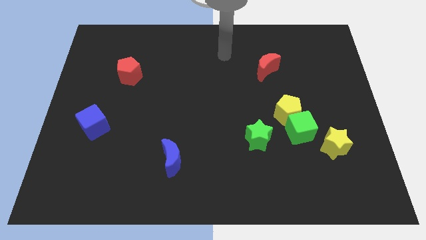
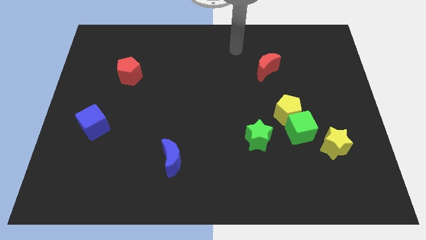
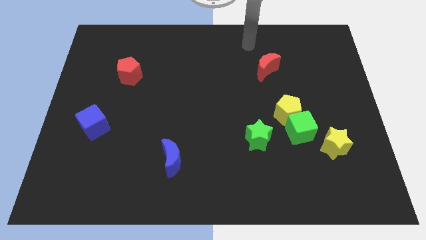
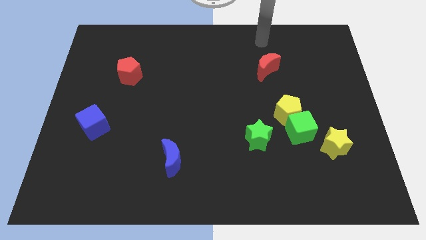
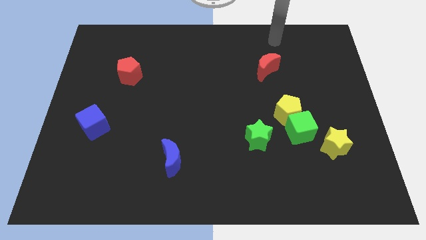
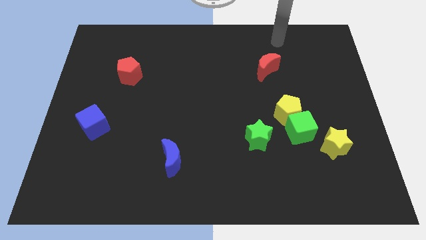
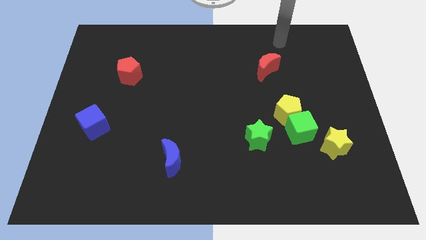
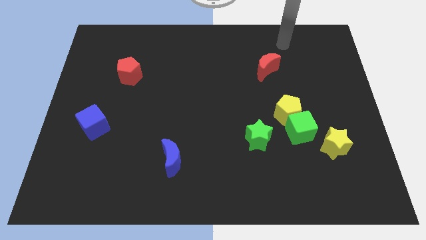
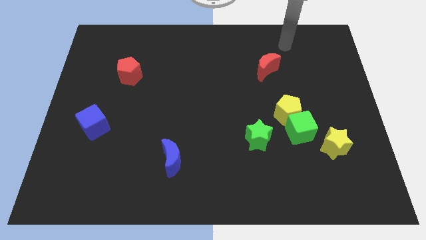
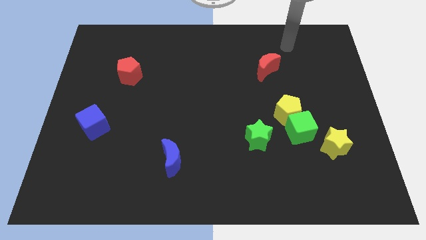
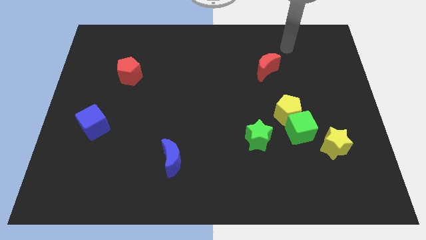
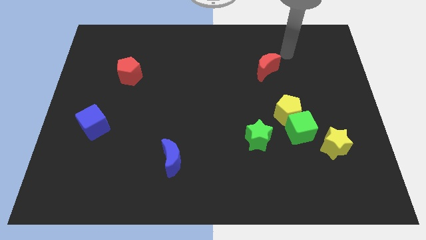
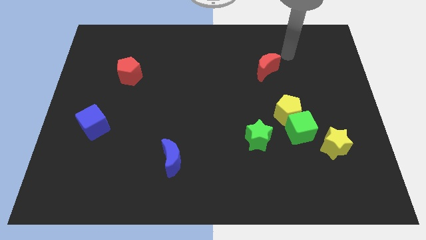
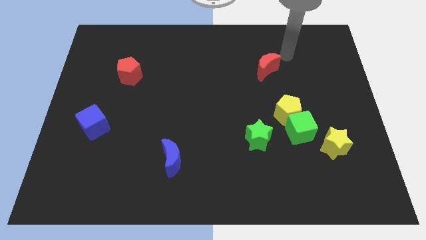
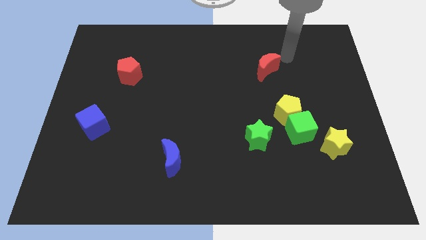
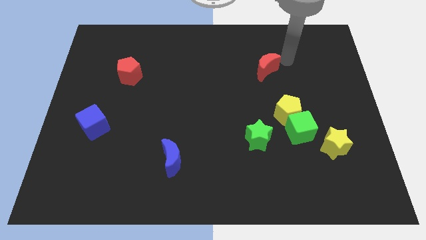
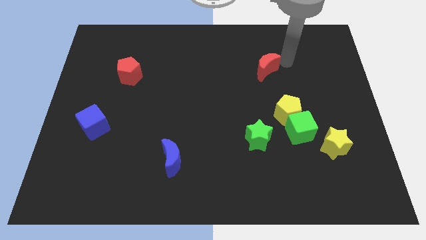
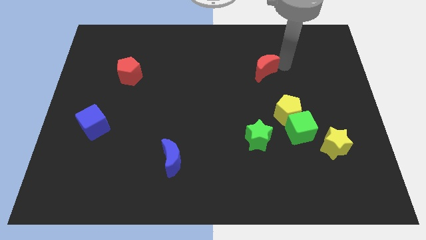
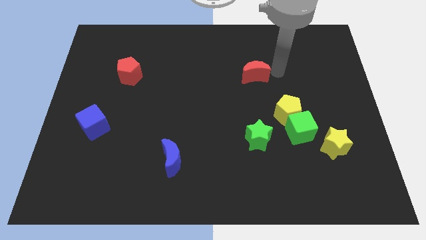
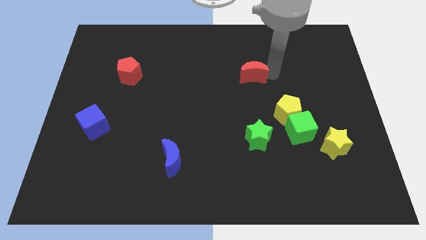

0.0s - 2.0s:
put the red moon vertically above the green star

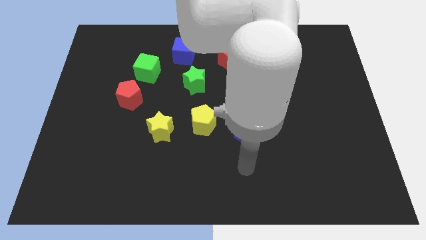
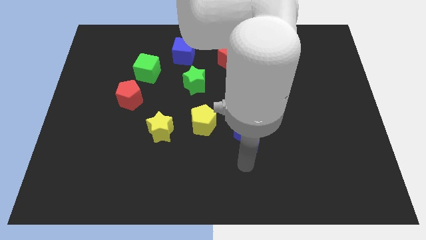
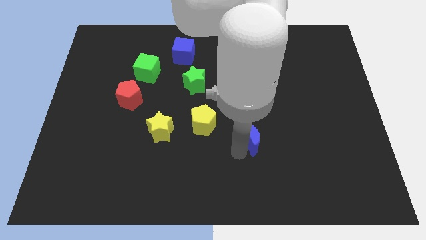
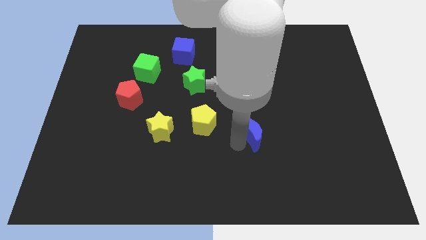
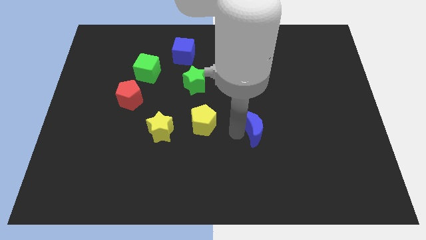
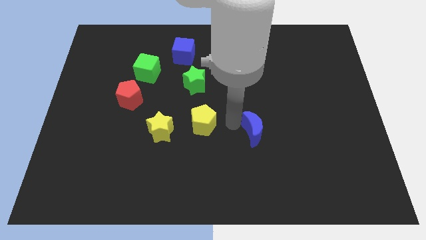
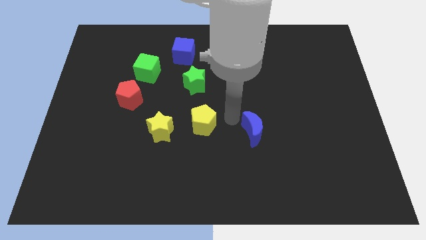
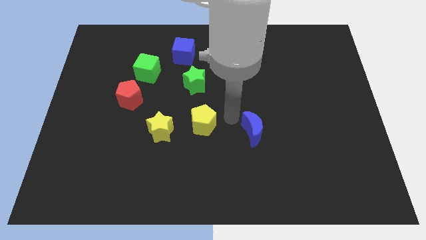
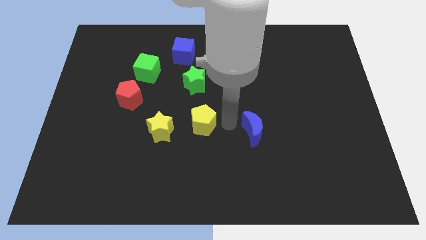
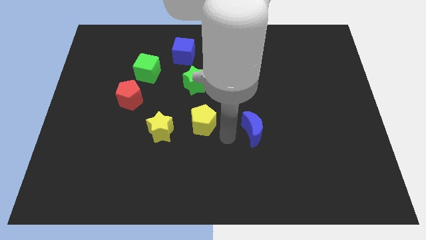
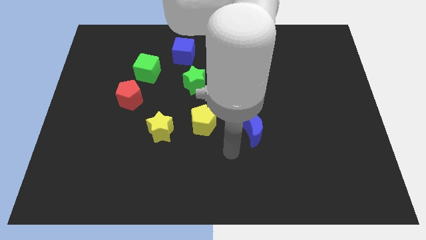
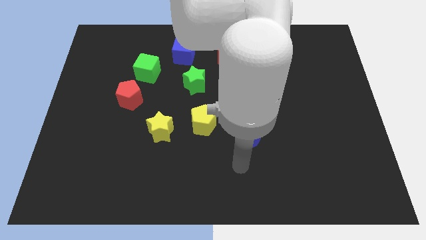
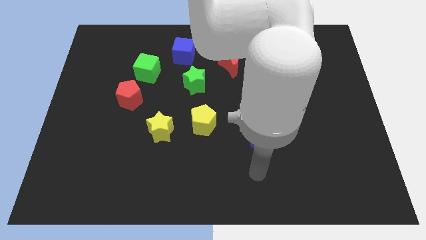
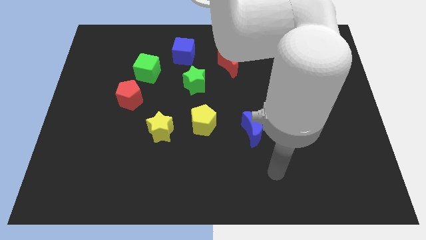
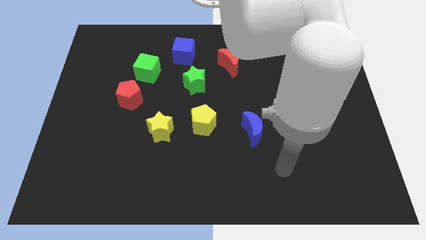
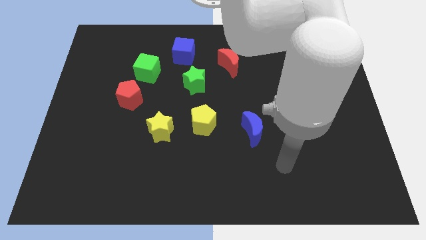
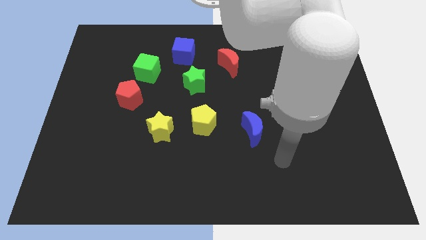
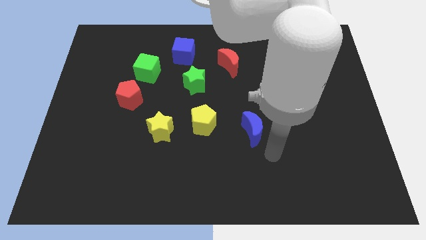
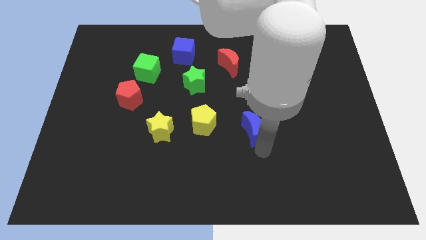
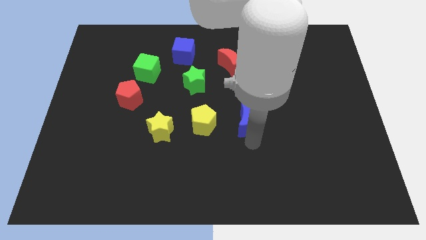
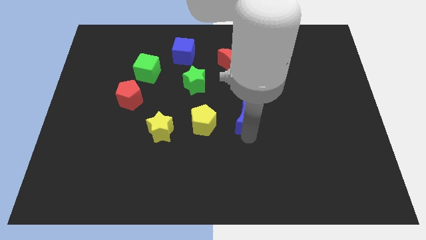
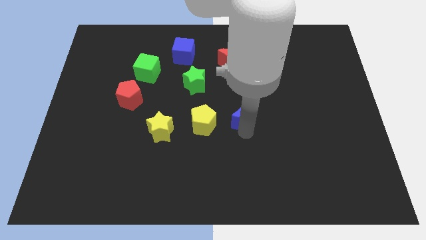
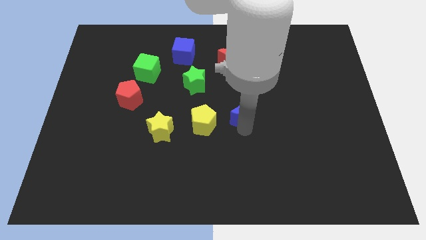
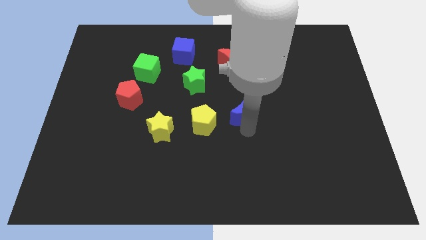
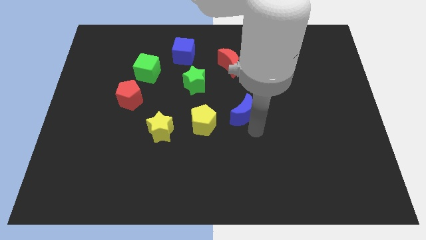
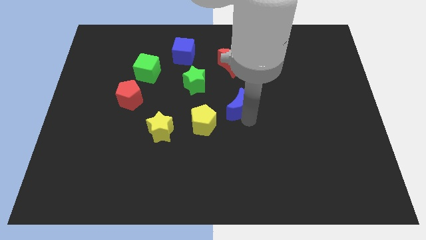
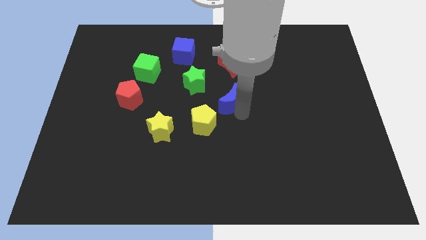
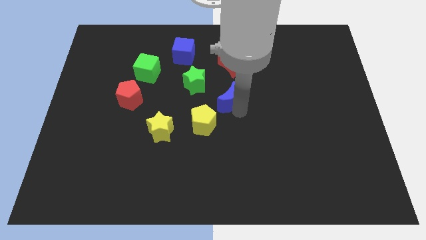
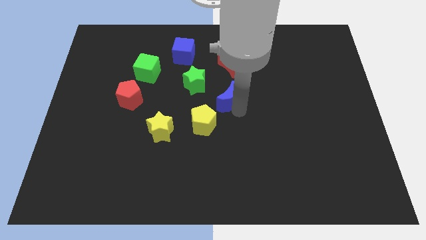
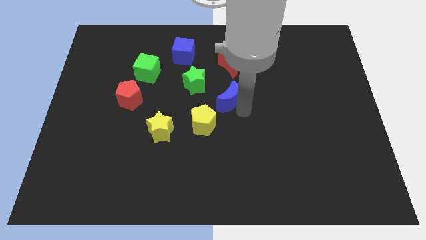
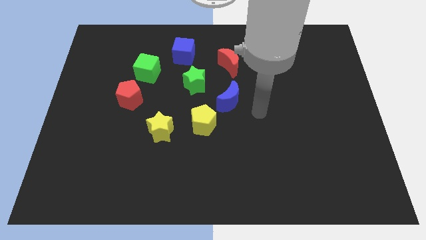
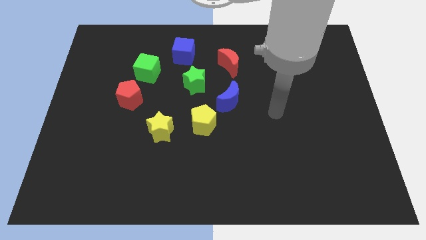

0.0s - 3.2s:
place the blue moon diagonally to the green star

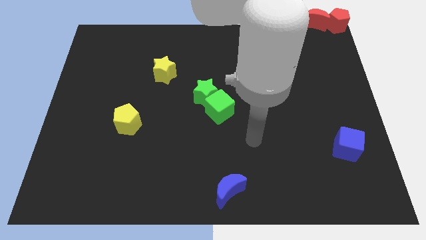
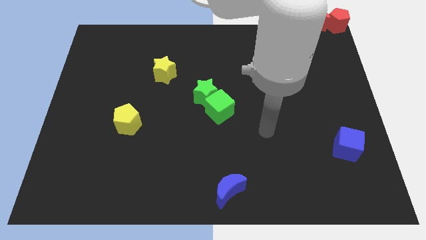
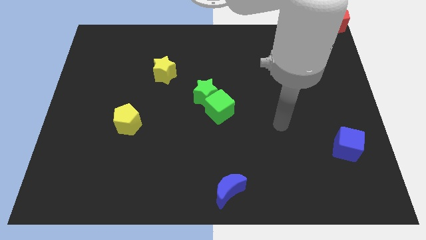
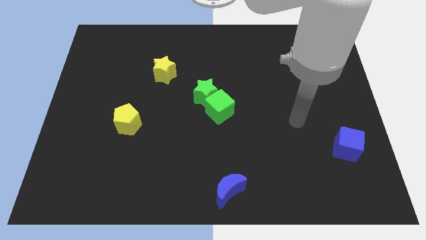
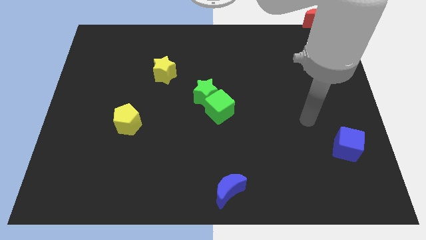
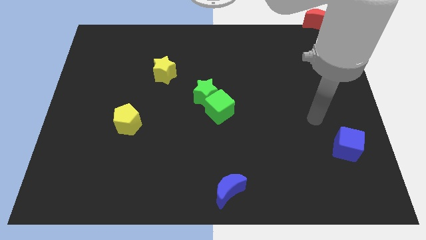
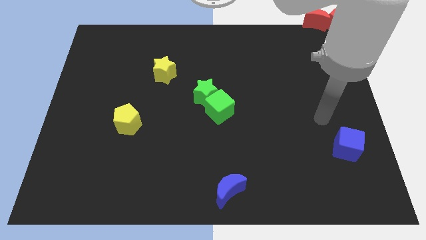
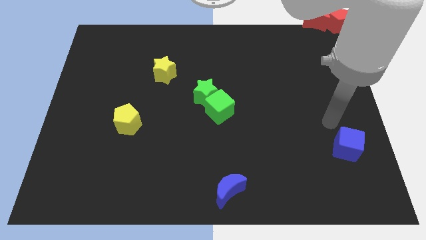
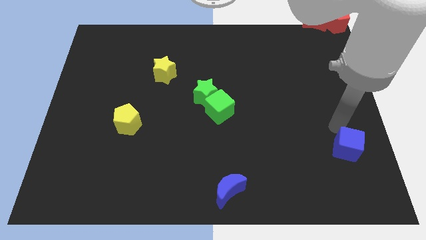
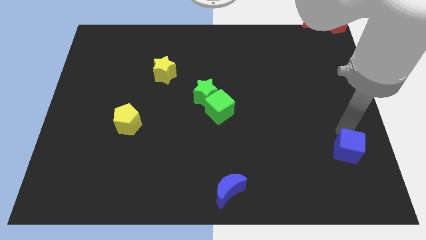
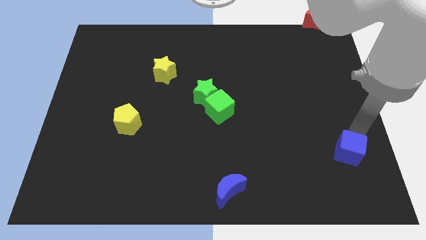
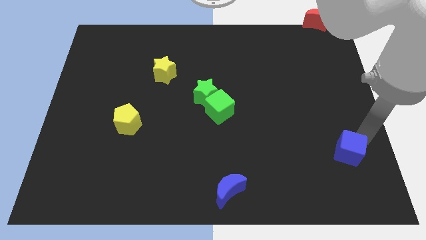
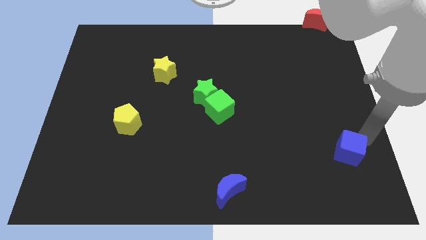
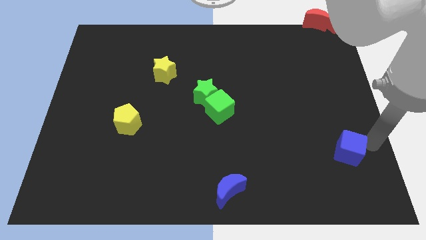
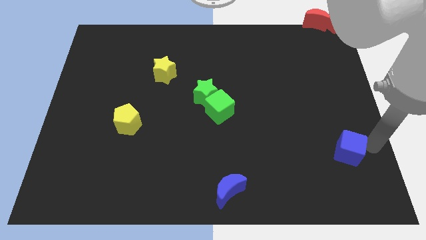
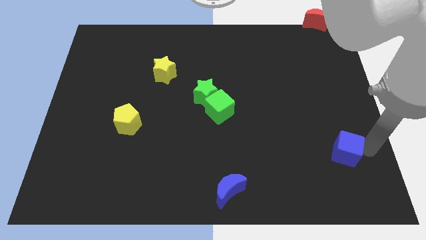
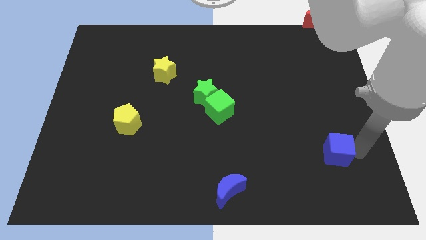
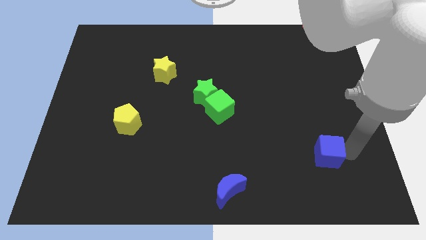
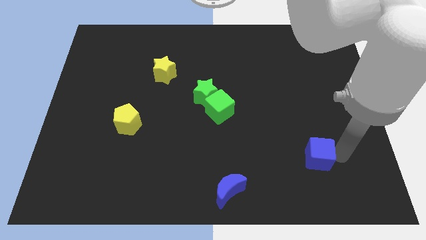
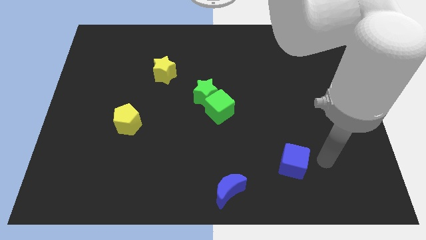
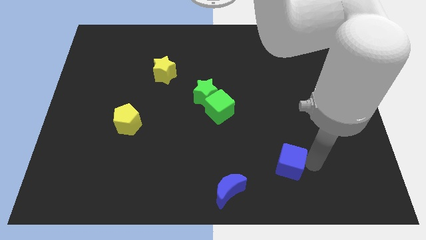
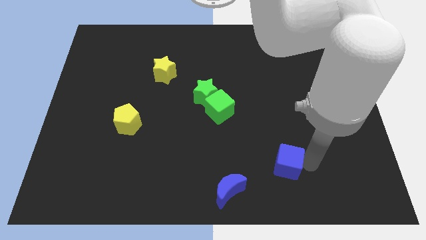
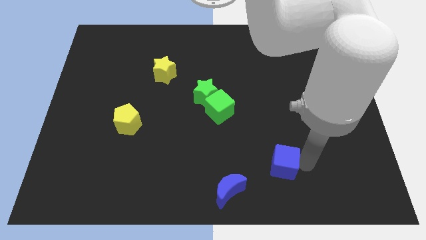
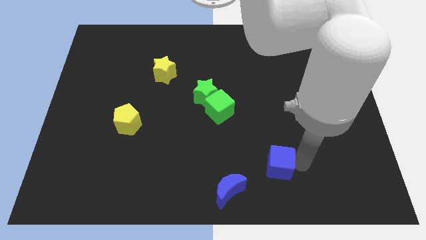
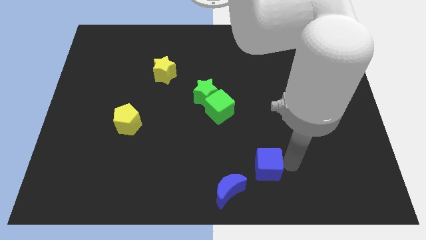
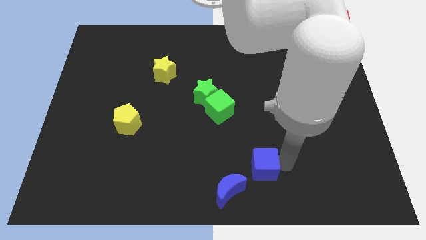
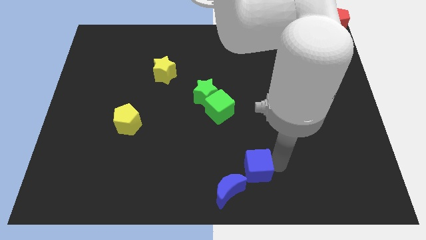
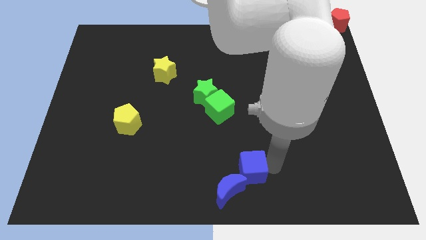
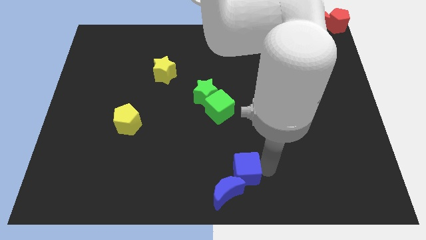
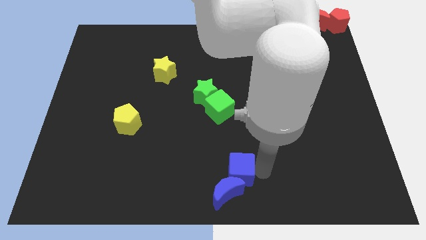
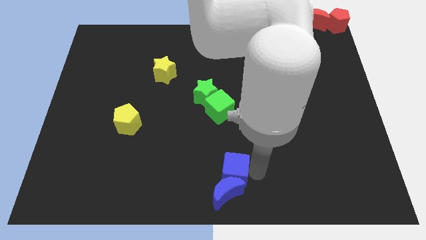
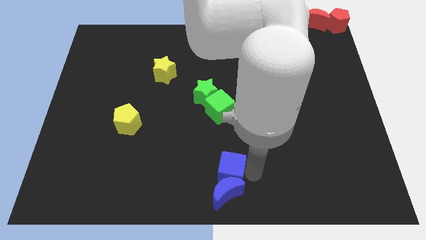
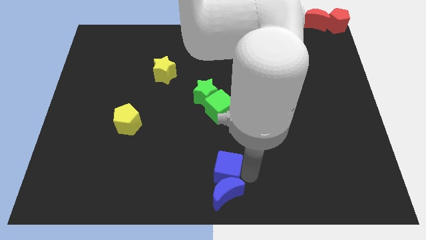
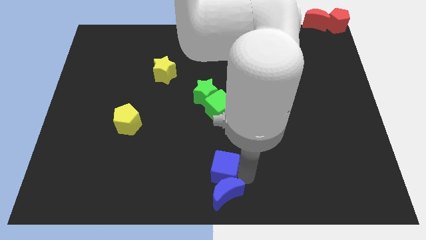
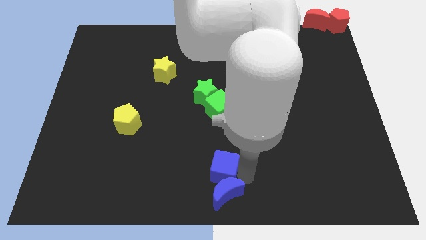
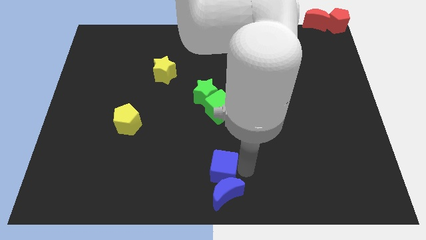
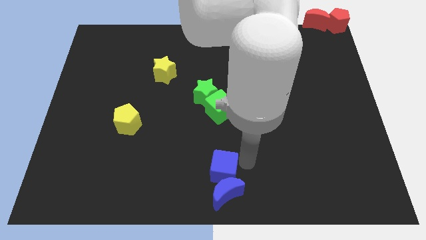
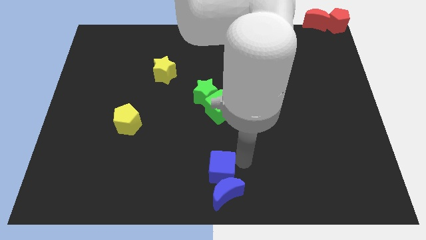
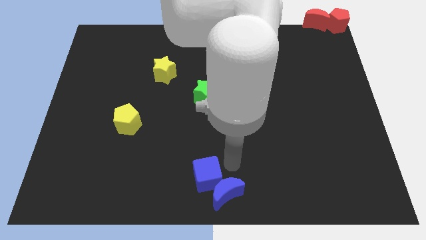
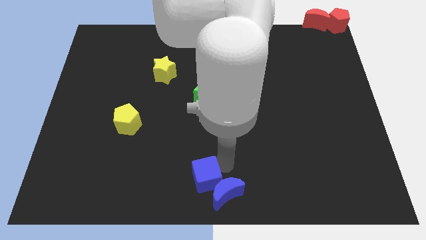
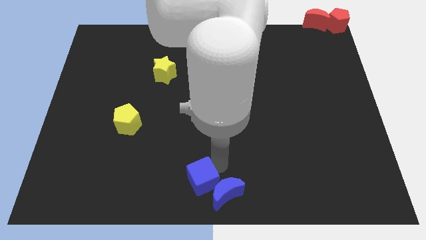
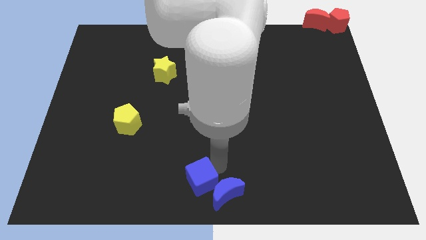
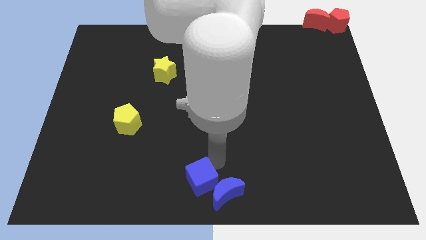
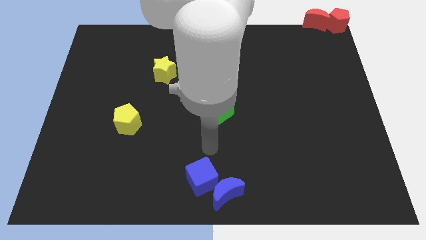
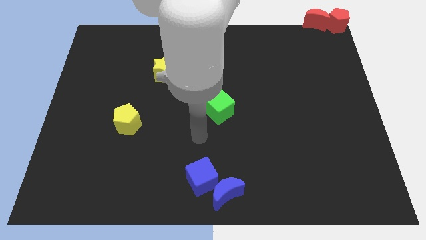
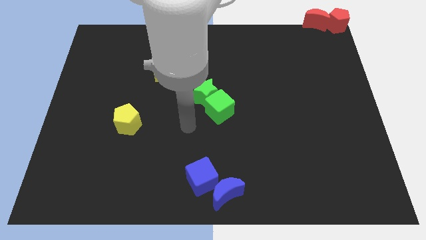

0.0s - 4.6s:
move the blue cube into the blue crescent
